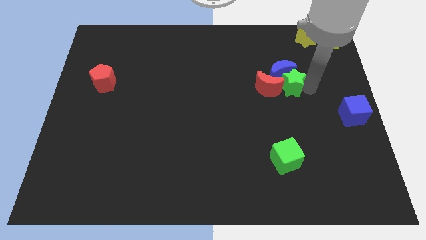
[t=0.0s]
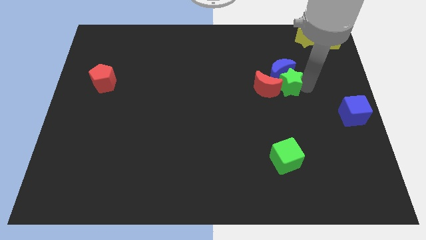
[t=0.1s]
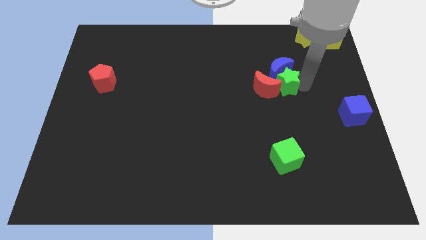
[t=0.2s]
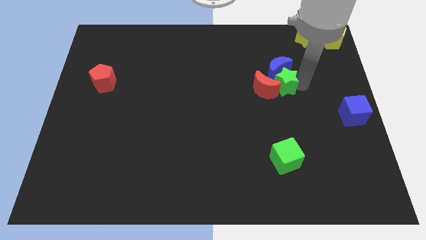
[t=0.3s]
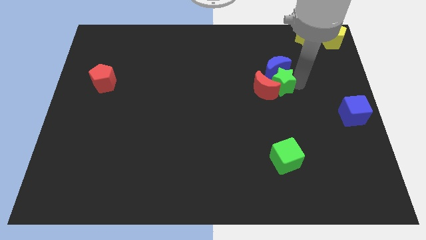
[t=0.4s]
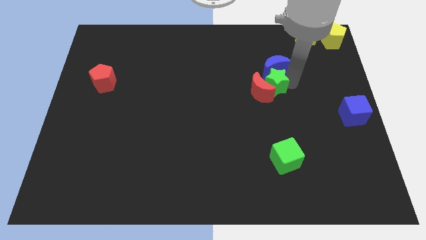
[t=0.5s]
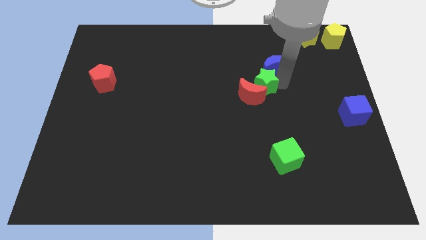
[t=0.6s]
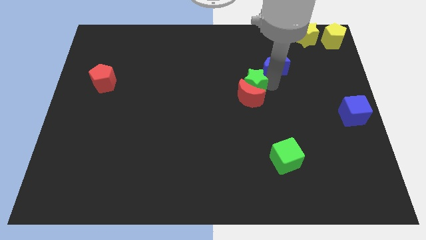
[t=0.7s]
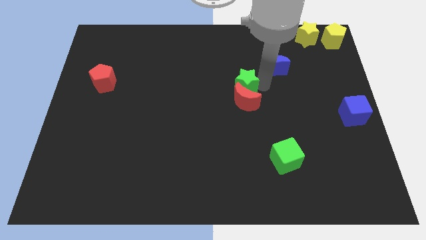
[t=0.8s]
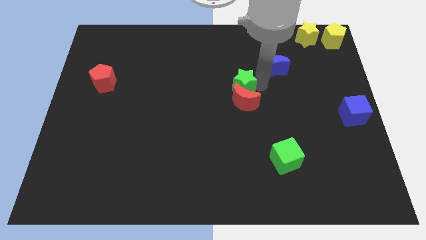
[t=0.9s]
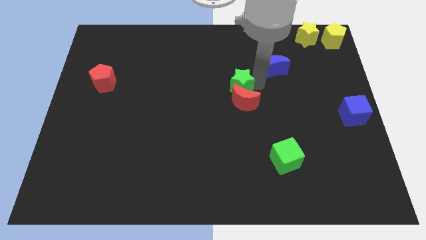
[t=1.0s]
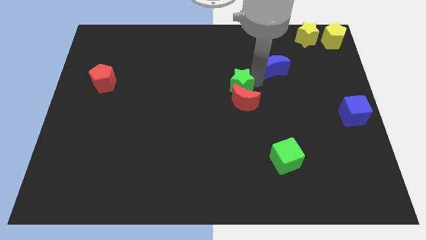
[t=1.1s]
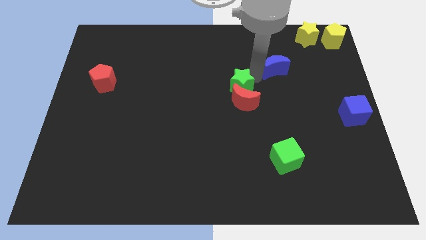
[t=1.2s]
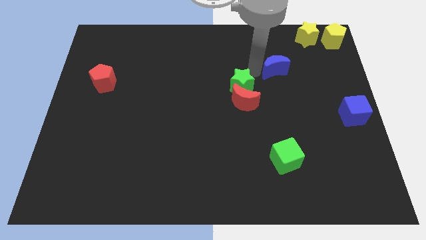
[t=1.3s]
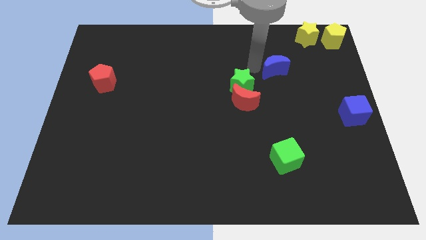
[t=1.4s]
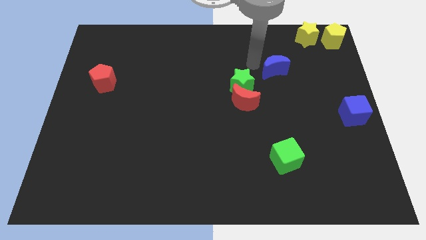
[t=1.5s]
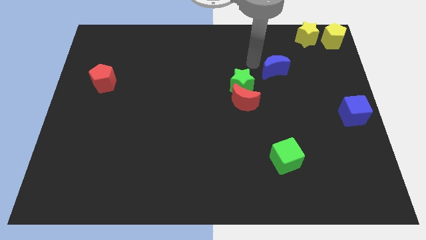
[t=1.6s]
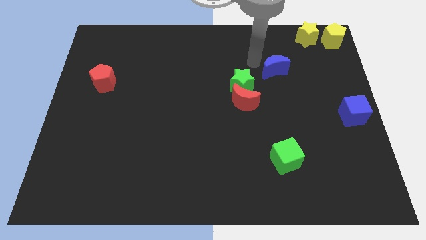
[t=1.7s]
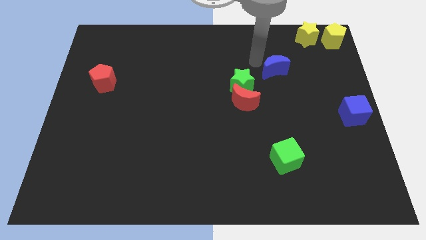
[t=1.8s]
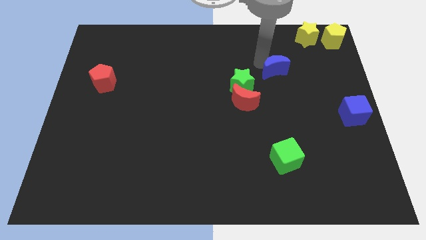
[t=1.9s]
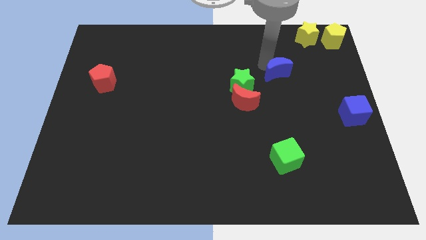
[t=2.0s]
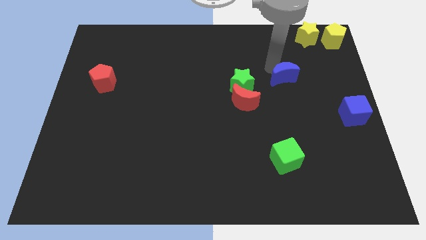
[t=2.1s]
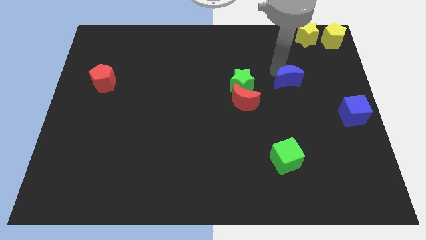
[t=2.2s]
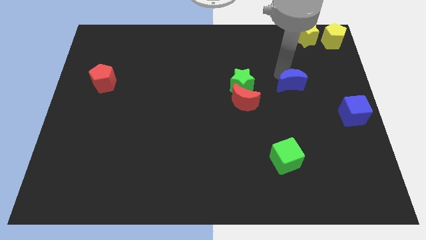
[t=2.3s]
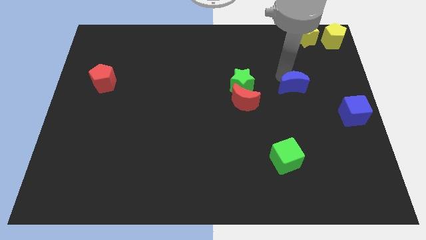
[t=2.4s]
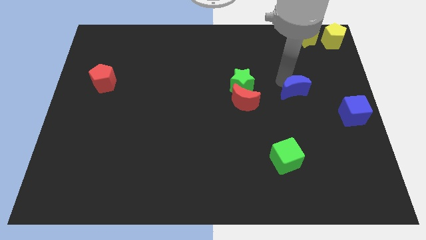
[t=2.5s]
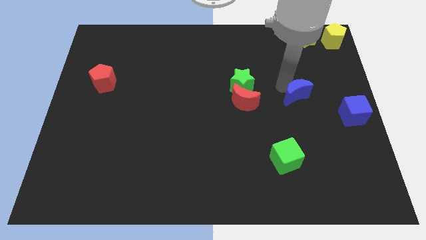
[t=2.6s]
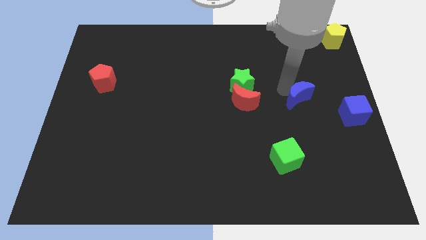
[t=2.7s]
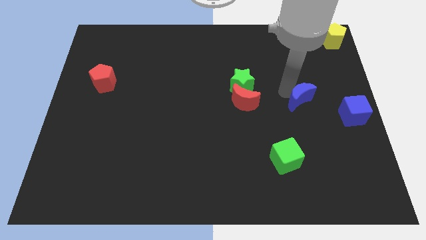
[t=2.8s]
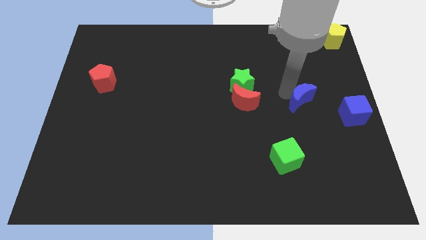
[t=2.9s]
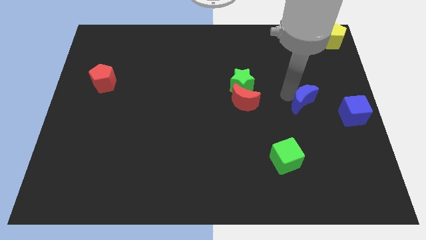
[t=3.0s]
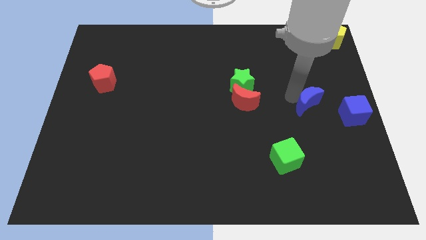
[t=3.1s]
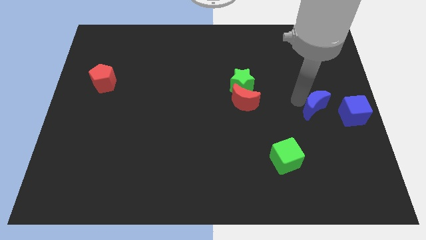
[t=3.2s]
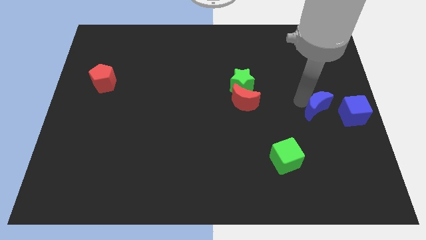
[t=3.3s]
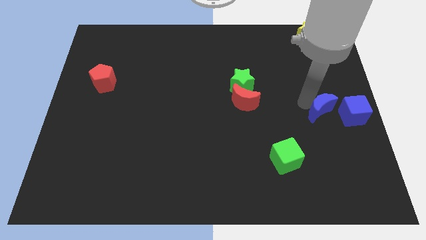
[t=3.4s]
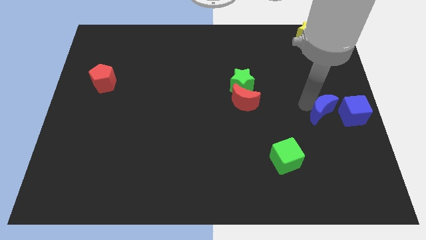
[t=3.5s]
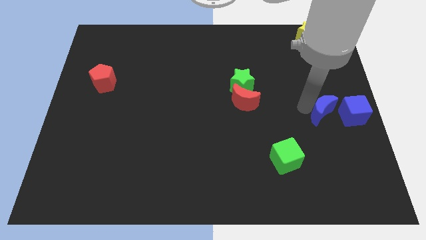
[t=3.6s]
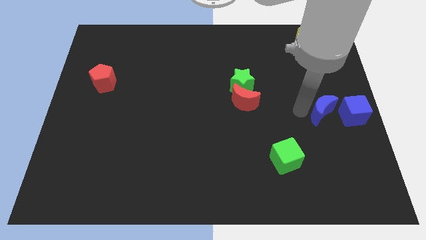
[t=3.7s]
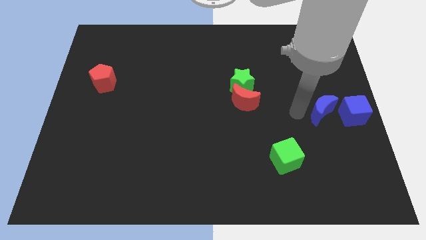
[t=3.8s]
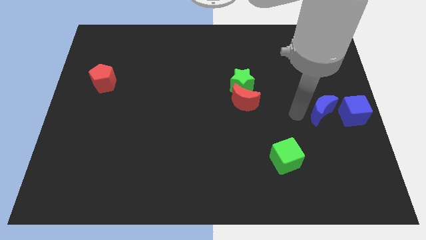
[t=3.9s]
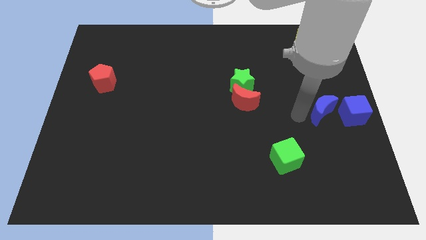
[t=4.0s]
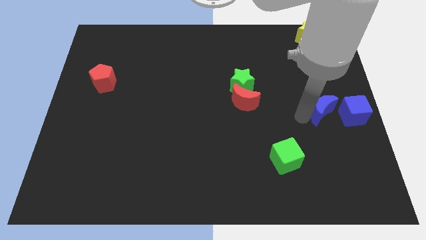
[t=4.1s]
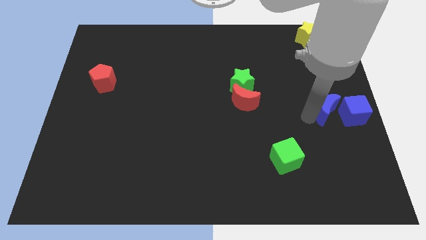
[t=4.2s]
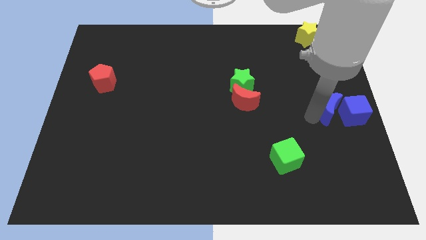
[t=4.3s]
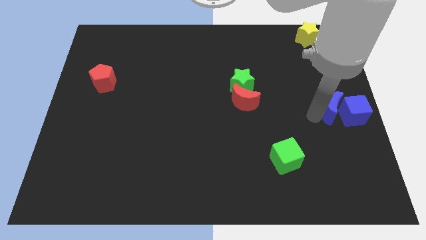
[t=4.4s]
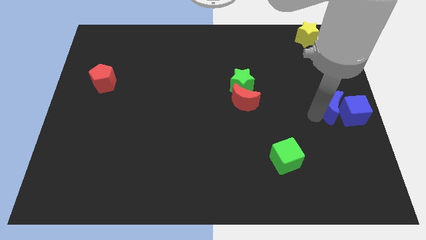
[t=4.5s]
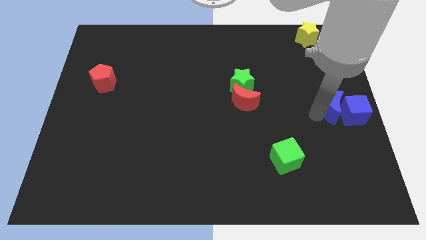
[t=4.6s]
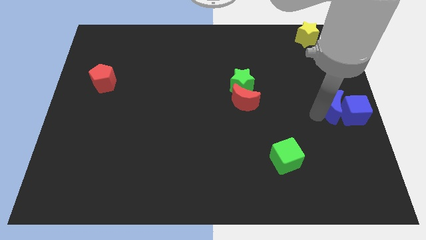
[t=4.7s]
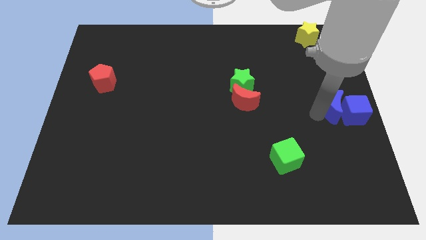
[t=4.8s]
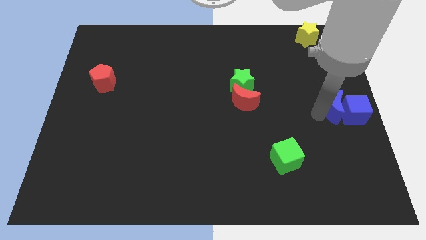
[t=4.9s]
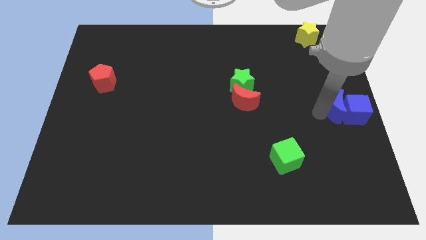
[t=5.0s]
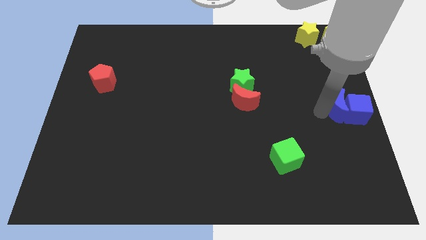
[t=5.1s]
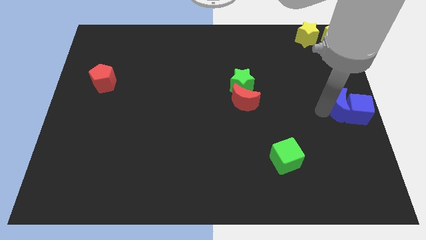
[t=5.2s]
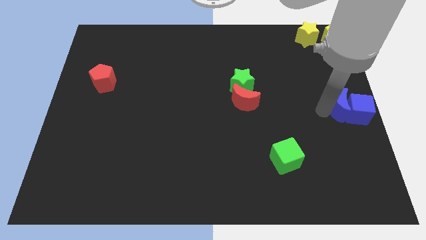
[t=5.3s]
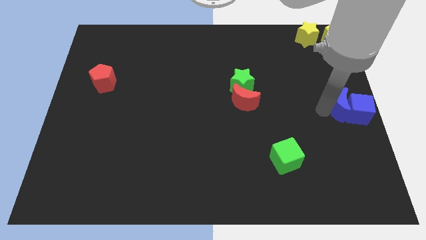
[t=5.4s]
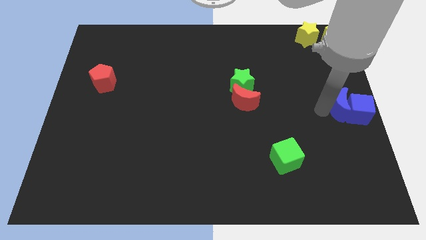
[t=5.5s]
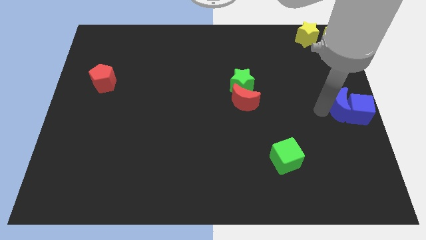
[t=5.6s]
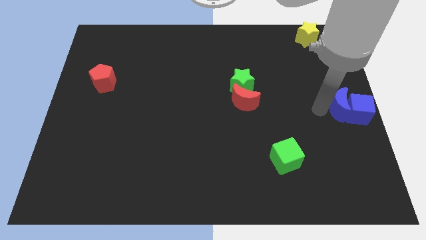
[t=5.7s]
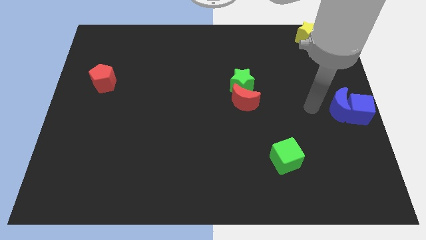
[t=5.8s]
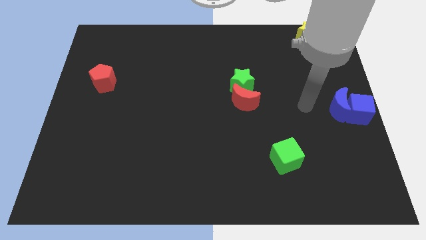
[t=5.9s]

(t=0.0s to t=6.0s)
move blue crescent into blue cube

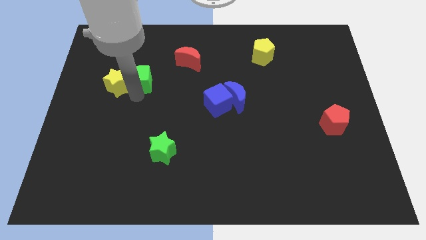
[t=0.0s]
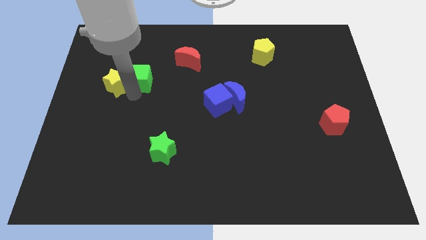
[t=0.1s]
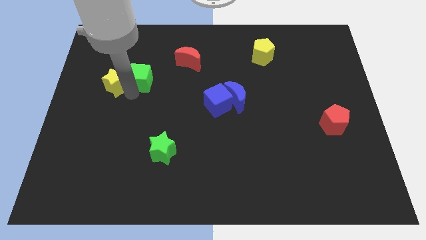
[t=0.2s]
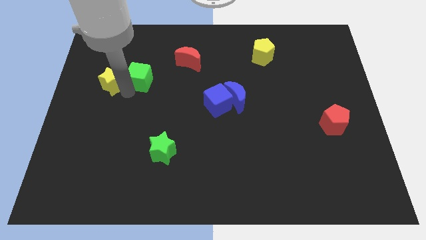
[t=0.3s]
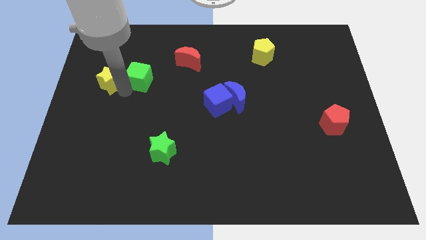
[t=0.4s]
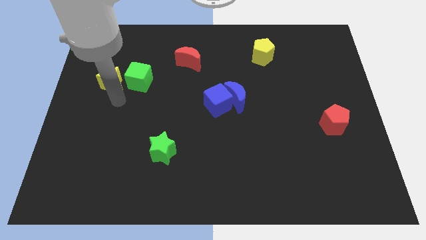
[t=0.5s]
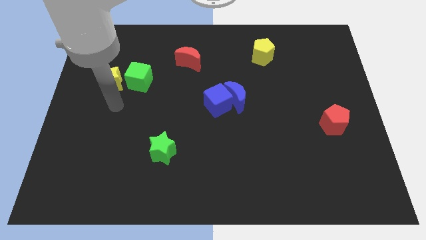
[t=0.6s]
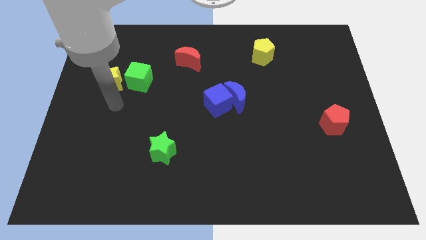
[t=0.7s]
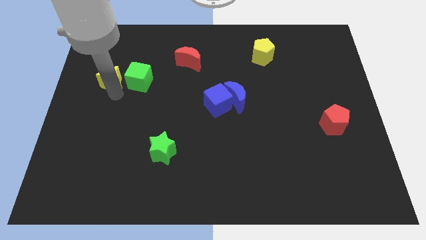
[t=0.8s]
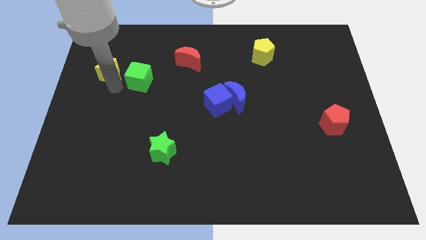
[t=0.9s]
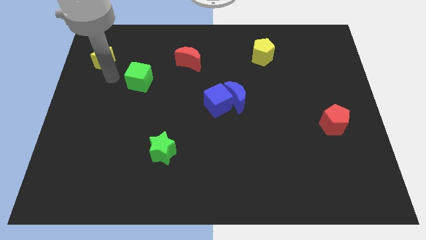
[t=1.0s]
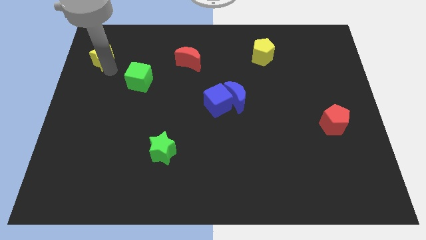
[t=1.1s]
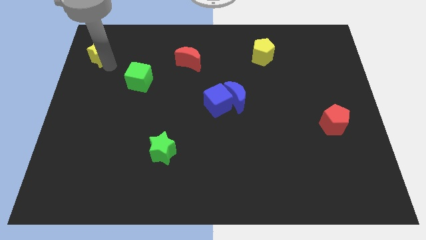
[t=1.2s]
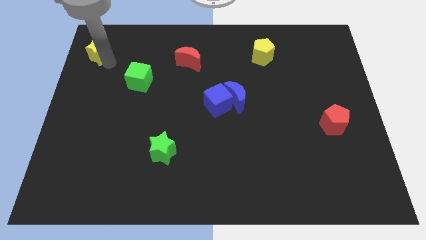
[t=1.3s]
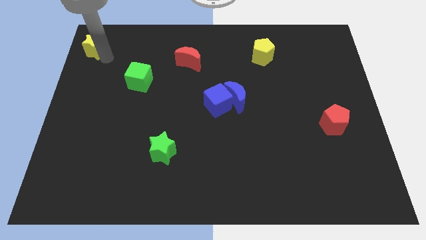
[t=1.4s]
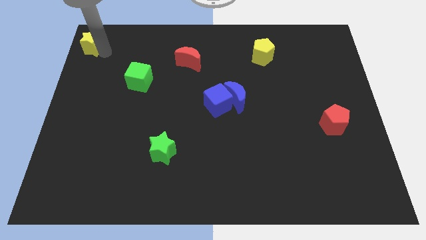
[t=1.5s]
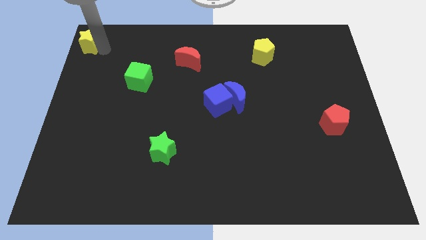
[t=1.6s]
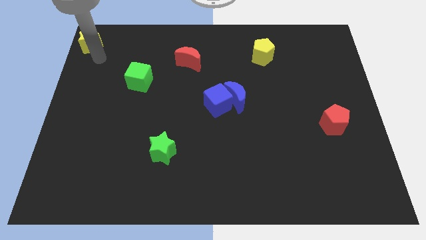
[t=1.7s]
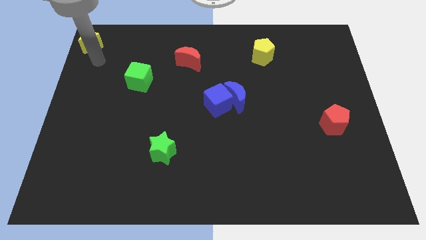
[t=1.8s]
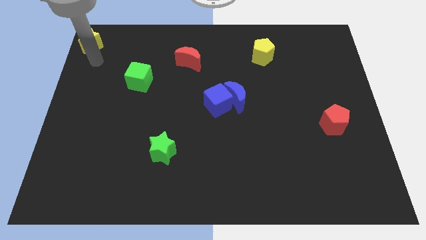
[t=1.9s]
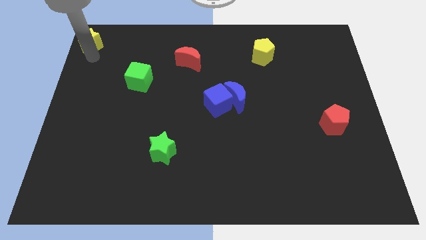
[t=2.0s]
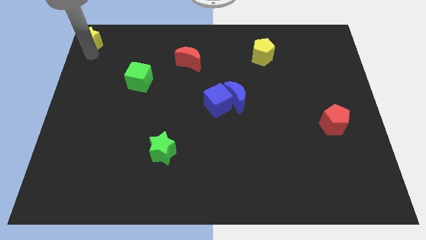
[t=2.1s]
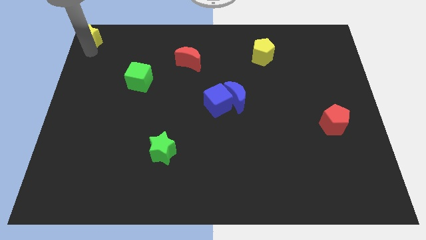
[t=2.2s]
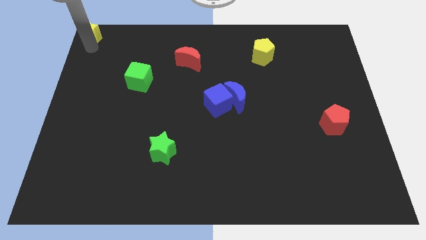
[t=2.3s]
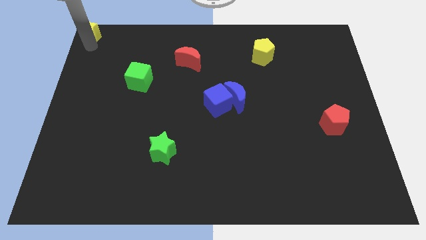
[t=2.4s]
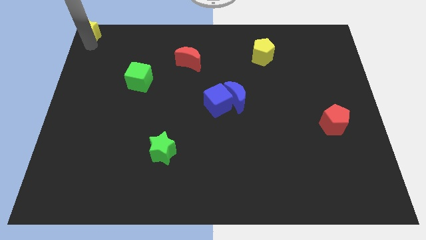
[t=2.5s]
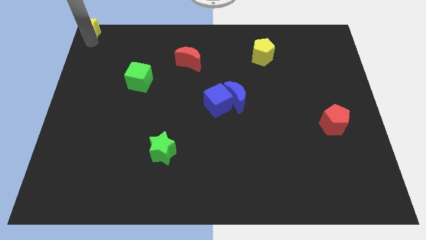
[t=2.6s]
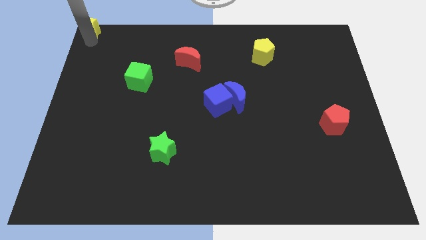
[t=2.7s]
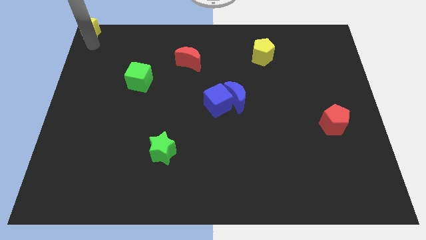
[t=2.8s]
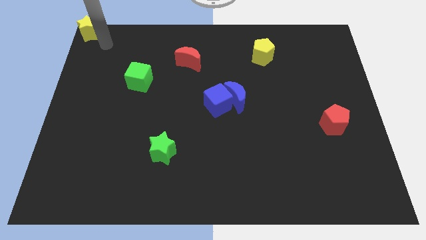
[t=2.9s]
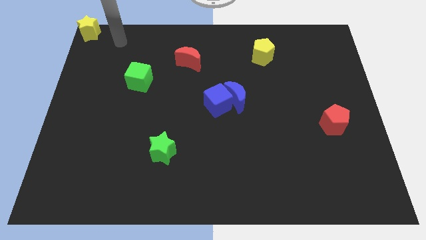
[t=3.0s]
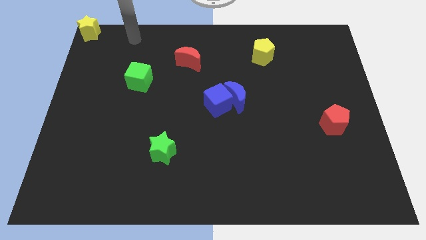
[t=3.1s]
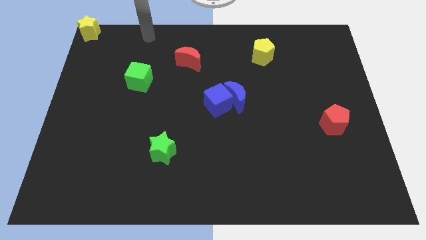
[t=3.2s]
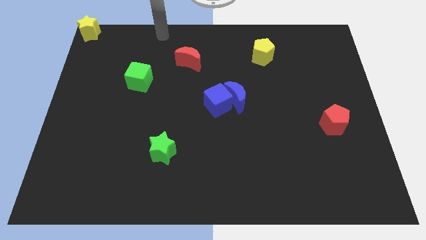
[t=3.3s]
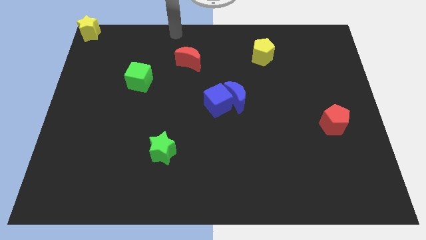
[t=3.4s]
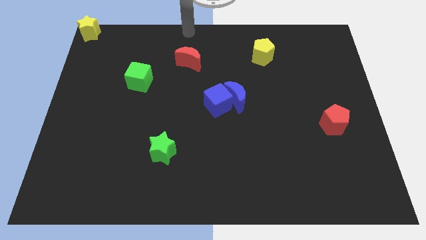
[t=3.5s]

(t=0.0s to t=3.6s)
place yellow star to the top left corner of the board
